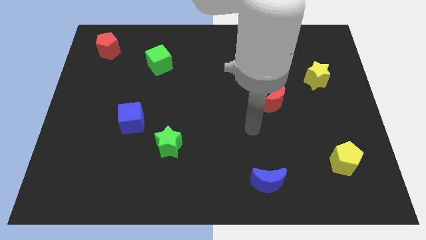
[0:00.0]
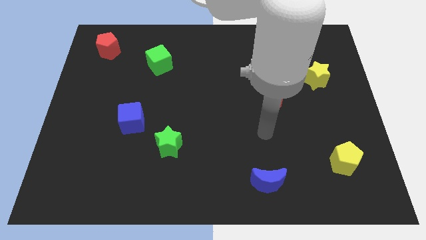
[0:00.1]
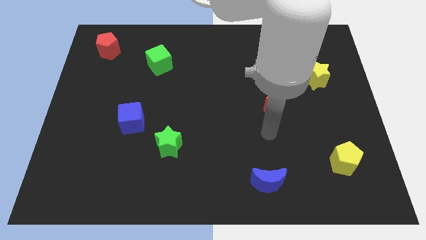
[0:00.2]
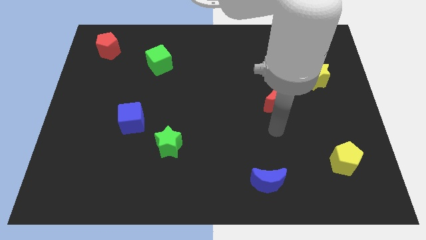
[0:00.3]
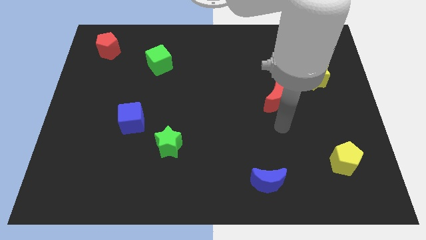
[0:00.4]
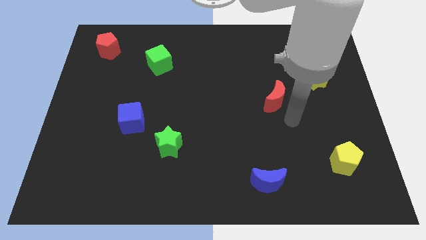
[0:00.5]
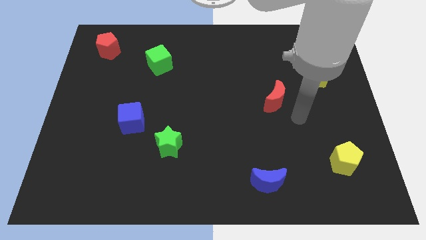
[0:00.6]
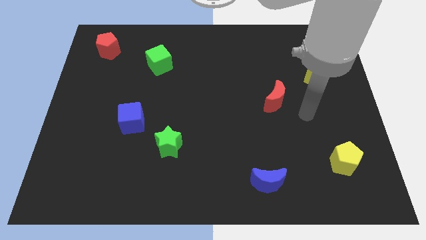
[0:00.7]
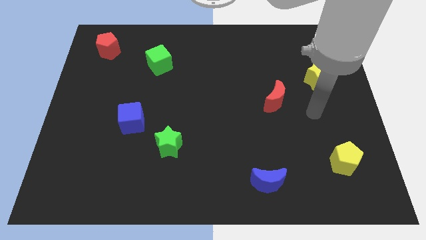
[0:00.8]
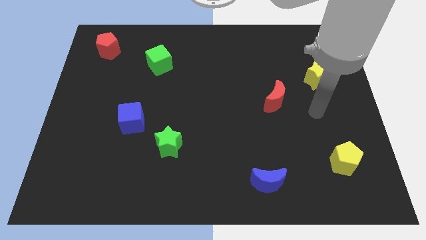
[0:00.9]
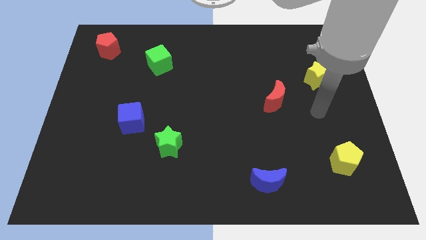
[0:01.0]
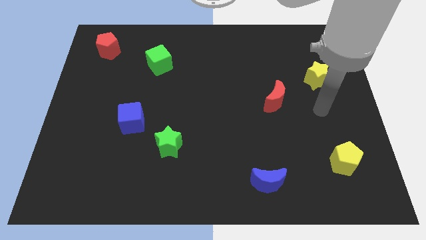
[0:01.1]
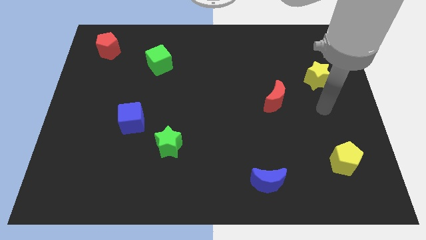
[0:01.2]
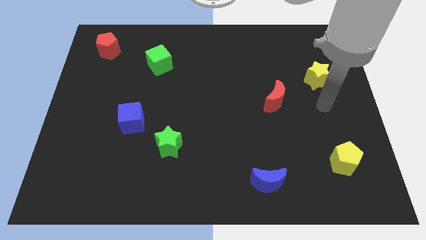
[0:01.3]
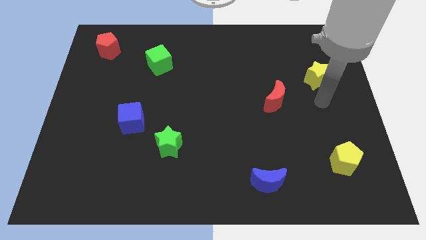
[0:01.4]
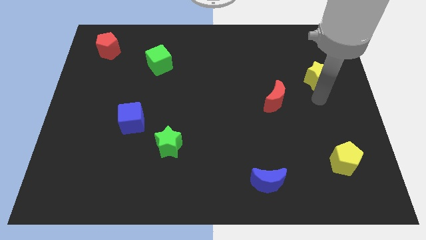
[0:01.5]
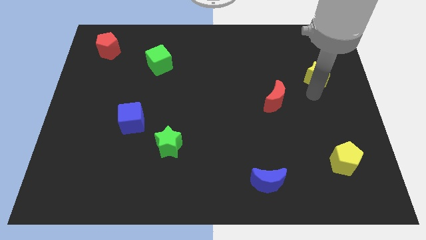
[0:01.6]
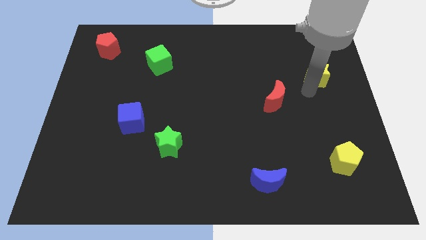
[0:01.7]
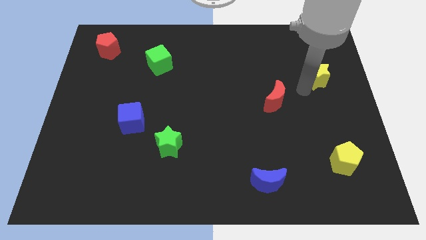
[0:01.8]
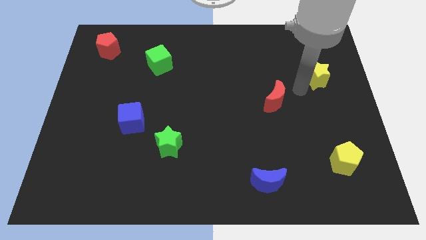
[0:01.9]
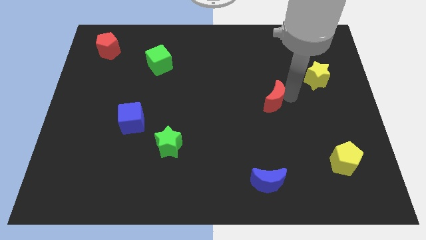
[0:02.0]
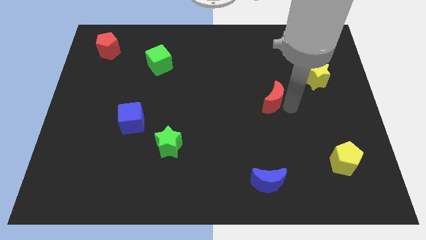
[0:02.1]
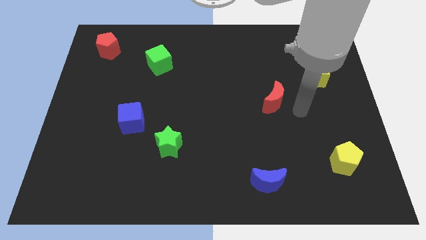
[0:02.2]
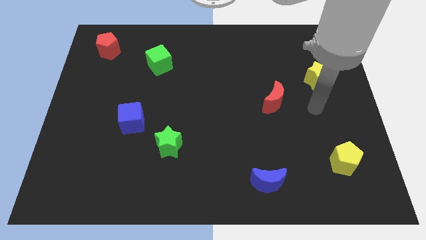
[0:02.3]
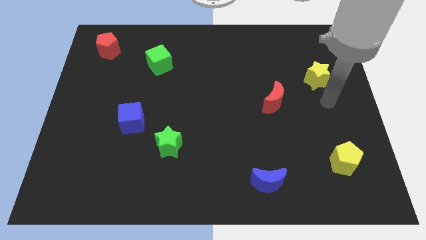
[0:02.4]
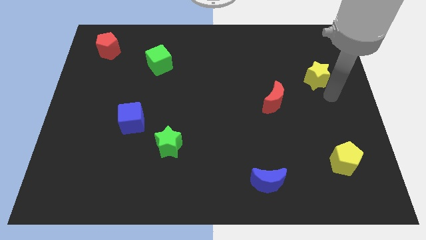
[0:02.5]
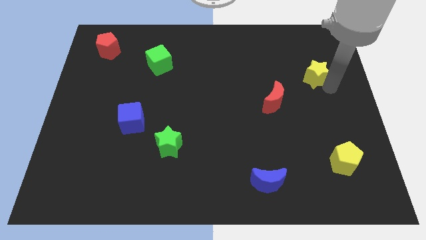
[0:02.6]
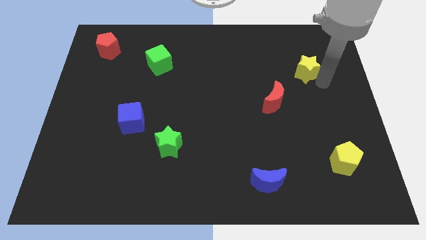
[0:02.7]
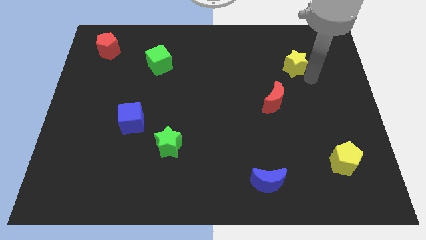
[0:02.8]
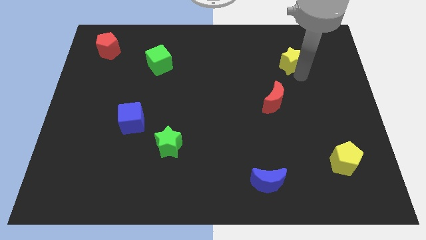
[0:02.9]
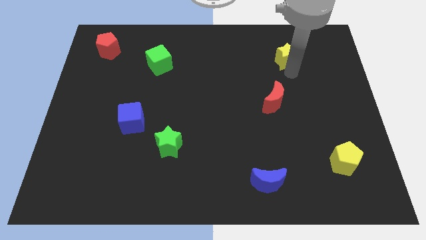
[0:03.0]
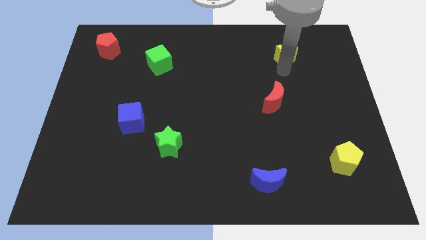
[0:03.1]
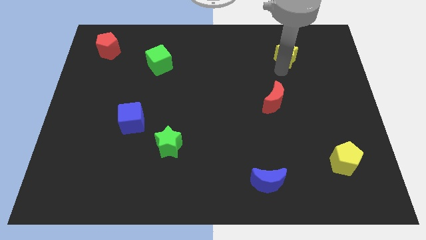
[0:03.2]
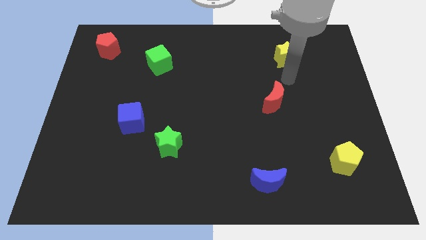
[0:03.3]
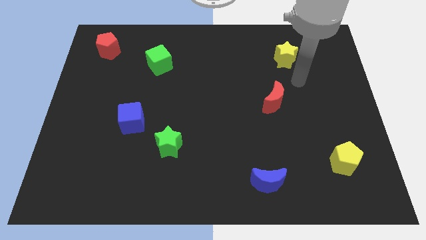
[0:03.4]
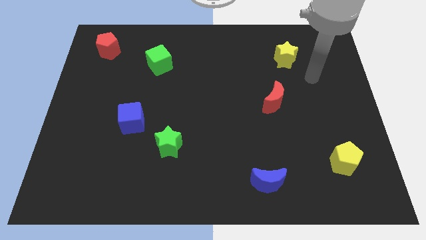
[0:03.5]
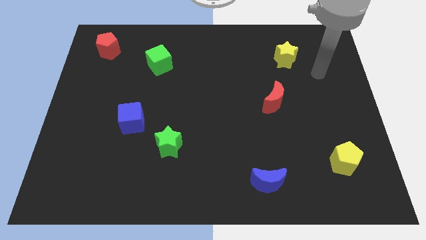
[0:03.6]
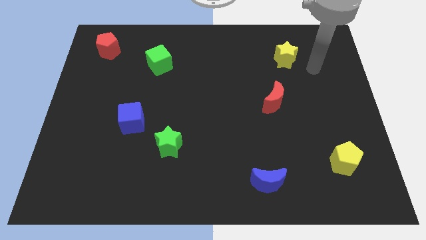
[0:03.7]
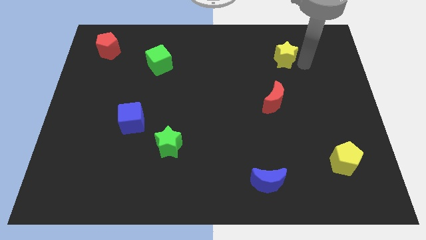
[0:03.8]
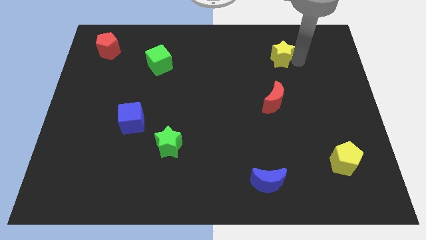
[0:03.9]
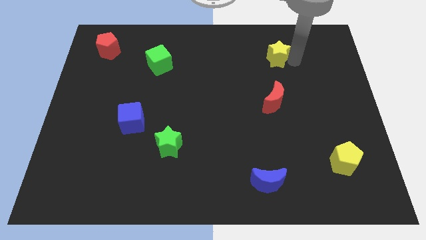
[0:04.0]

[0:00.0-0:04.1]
slide yellow star on top of red moon

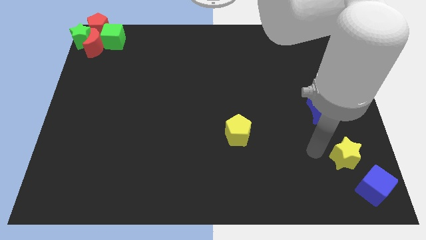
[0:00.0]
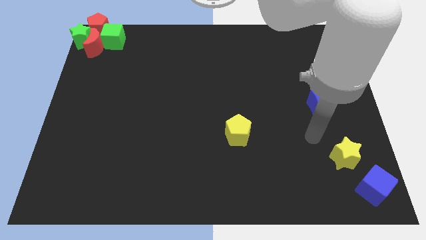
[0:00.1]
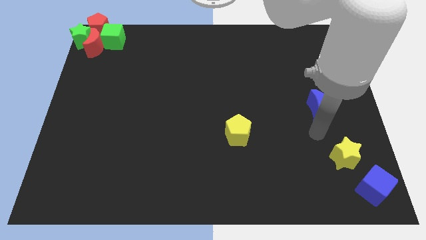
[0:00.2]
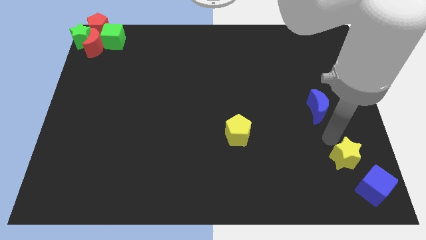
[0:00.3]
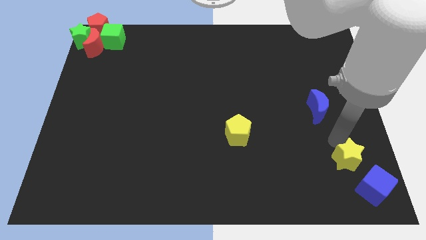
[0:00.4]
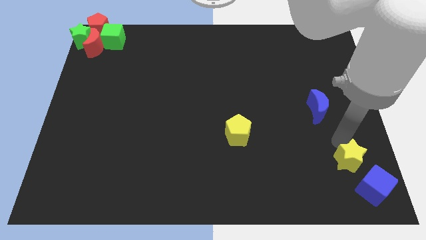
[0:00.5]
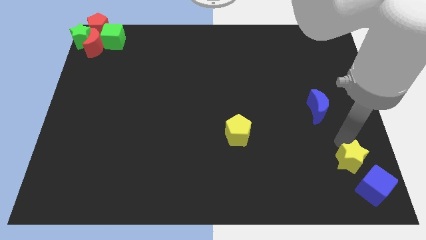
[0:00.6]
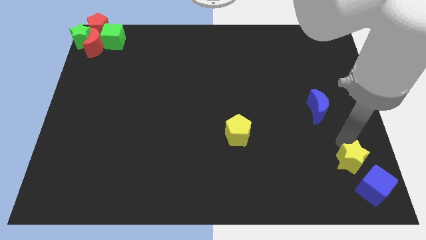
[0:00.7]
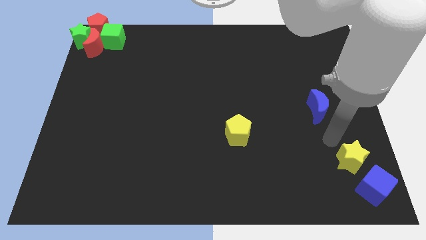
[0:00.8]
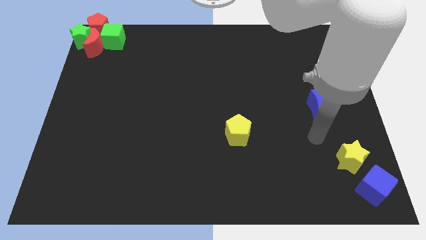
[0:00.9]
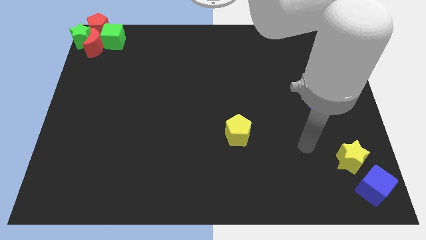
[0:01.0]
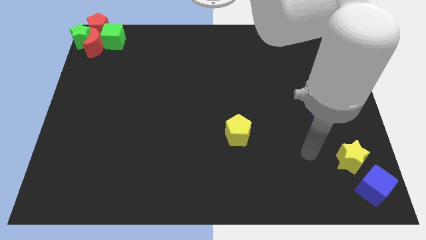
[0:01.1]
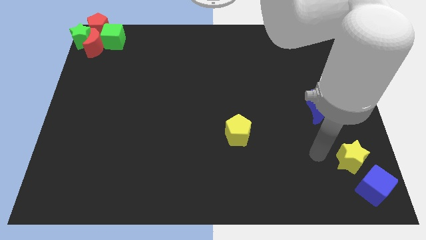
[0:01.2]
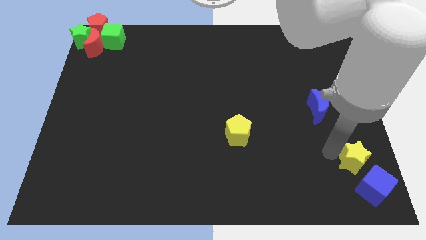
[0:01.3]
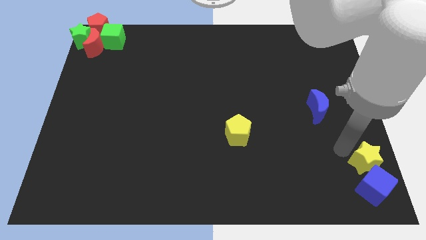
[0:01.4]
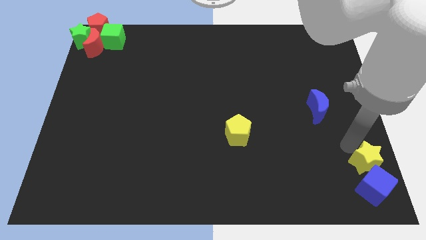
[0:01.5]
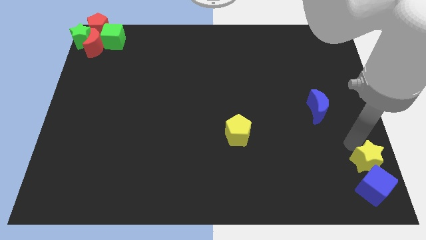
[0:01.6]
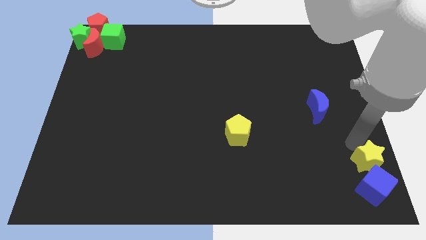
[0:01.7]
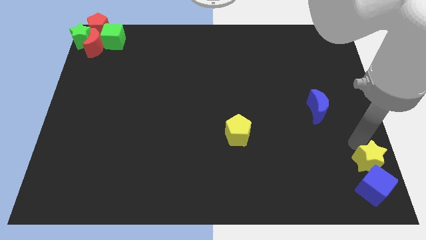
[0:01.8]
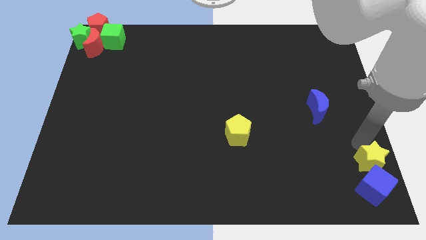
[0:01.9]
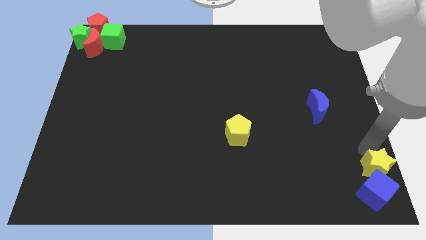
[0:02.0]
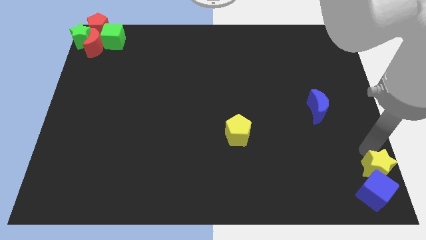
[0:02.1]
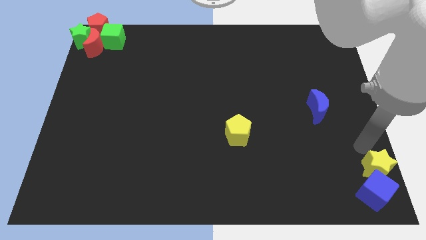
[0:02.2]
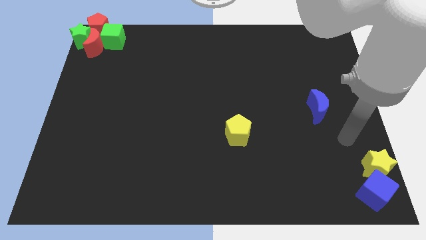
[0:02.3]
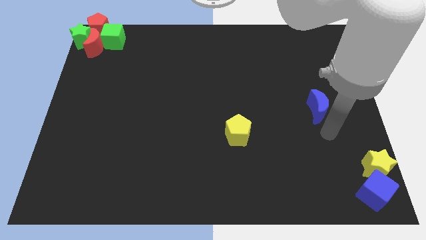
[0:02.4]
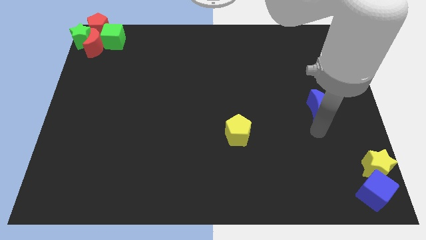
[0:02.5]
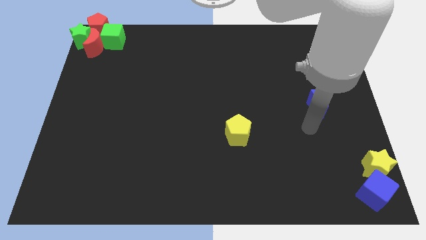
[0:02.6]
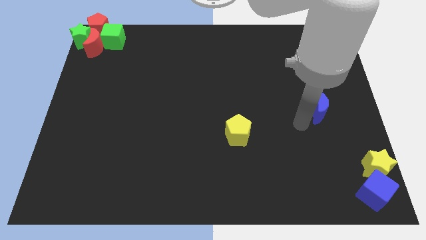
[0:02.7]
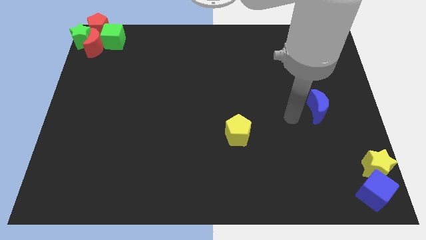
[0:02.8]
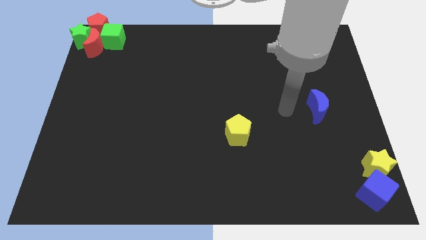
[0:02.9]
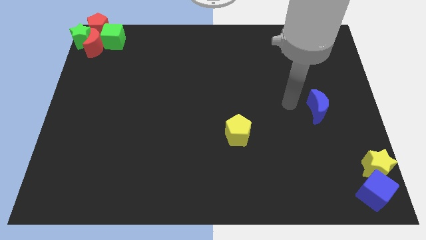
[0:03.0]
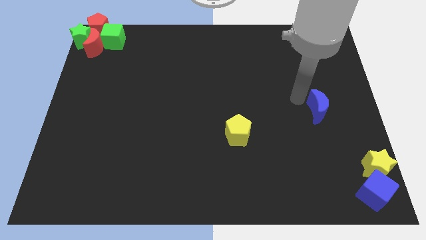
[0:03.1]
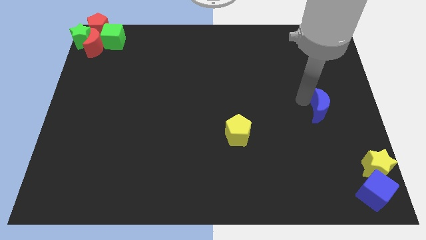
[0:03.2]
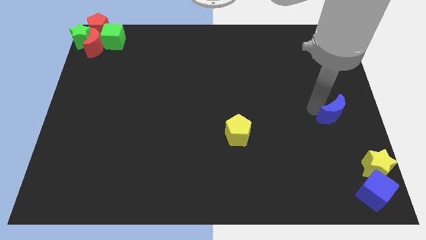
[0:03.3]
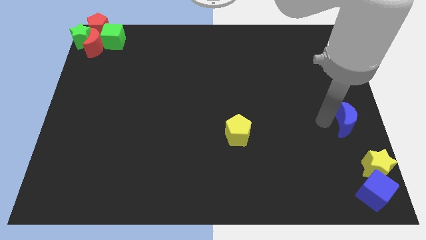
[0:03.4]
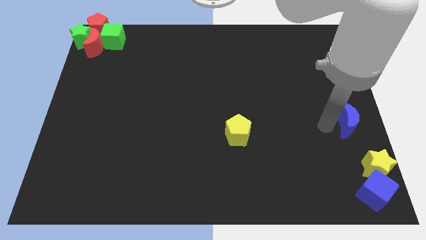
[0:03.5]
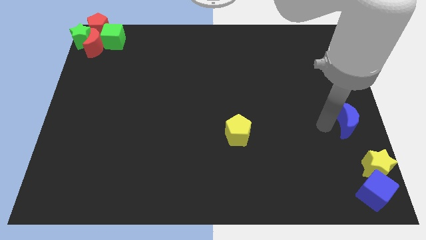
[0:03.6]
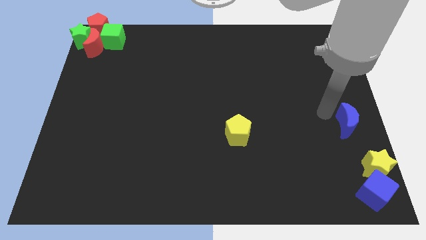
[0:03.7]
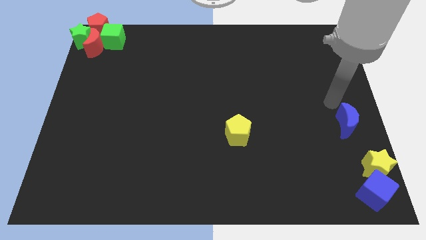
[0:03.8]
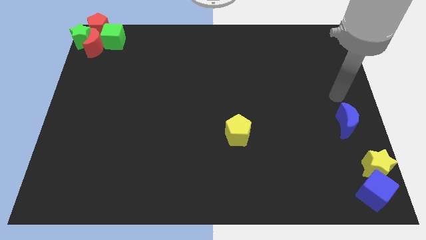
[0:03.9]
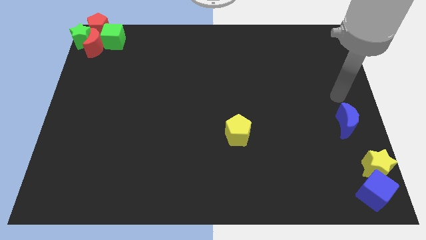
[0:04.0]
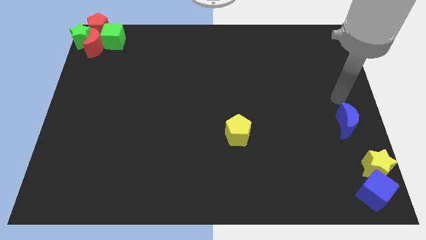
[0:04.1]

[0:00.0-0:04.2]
move the blue cube along with the yellow star towards the bottom right of the board

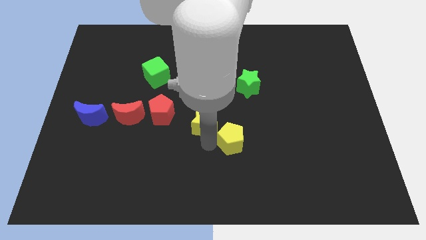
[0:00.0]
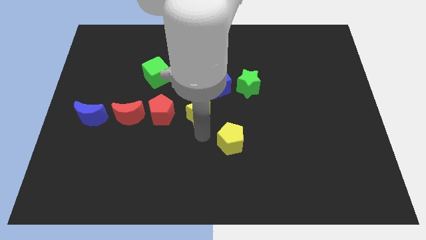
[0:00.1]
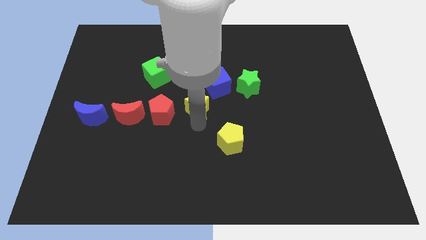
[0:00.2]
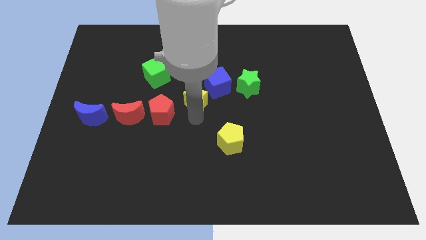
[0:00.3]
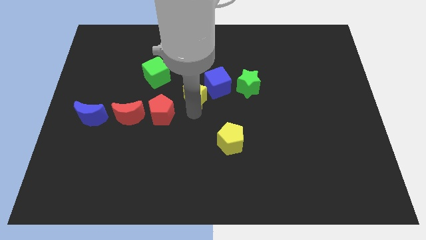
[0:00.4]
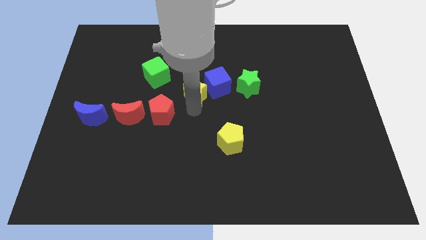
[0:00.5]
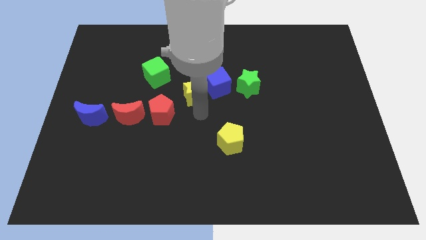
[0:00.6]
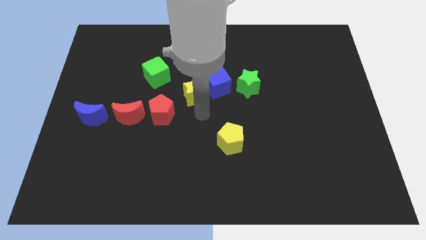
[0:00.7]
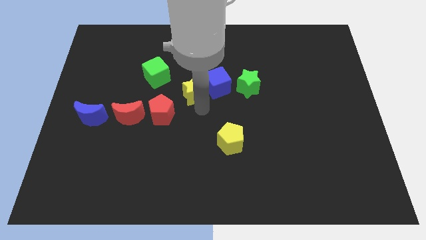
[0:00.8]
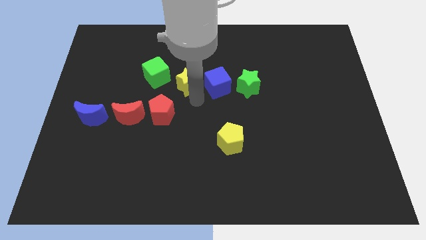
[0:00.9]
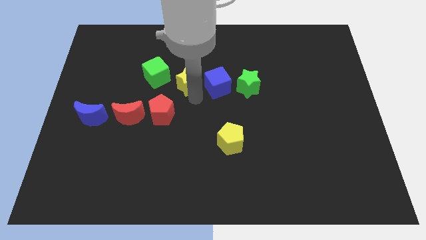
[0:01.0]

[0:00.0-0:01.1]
separate yellow star from yellow pentagon
